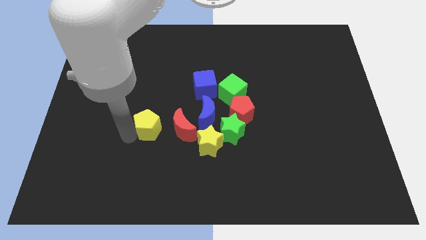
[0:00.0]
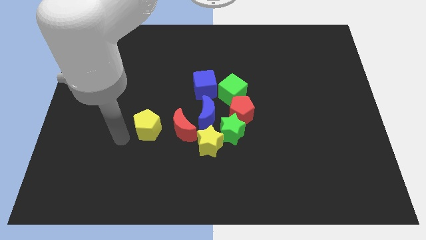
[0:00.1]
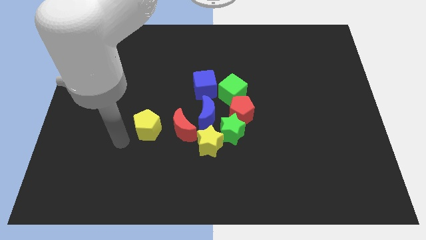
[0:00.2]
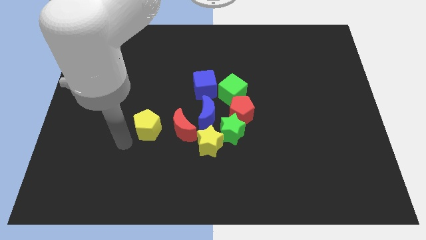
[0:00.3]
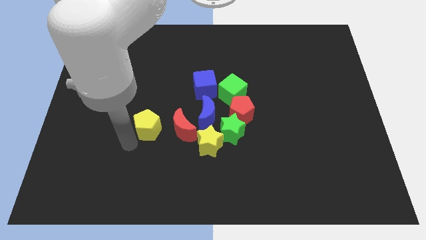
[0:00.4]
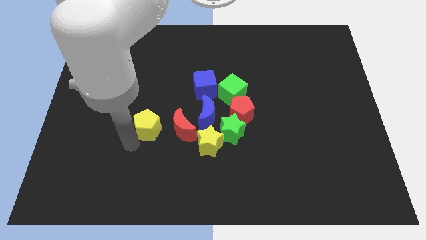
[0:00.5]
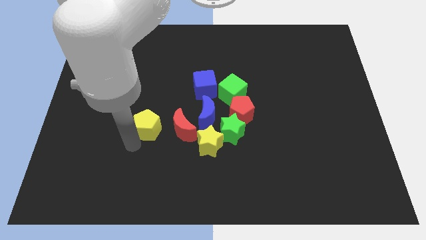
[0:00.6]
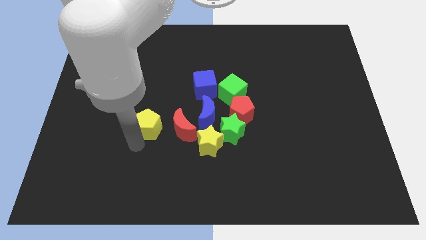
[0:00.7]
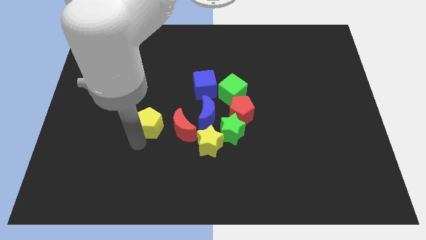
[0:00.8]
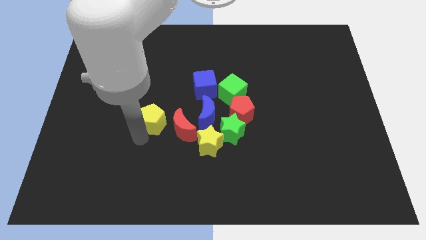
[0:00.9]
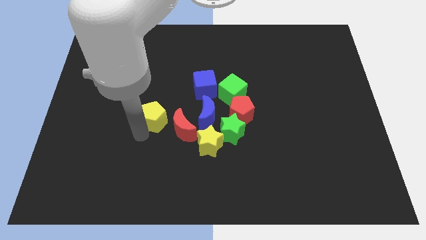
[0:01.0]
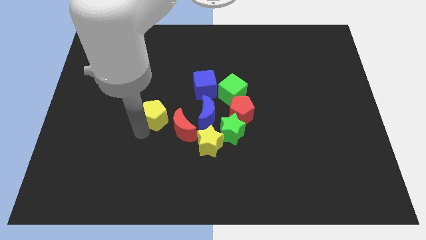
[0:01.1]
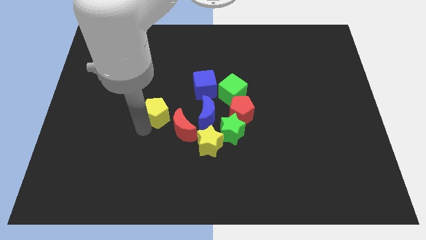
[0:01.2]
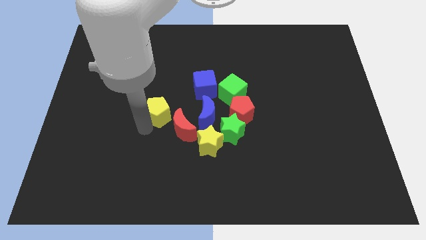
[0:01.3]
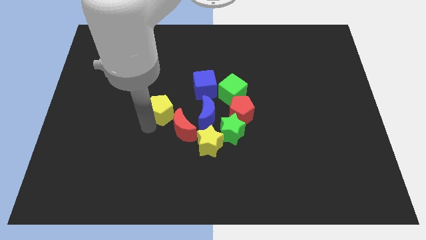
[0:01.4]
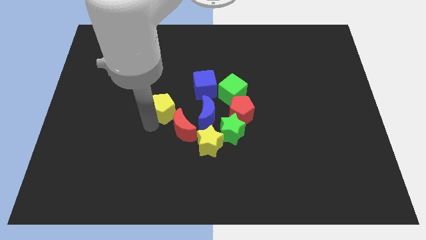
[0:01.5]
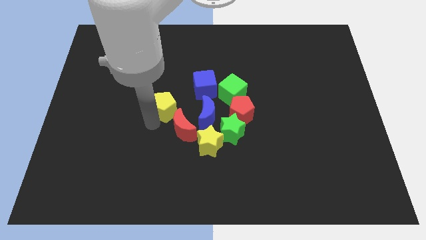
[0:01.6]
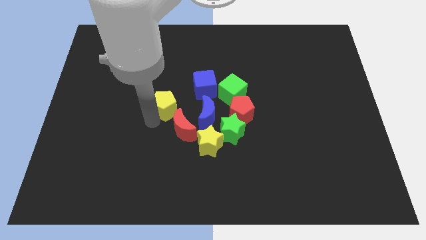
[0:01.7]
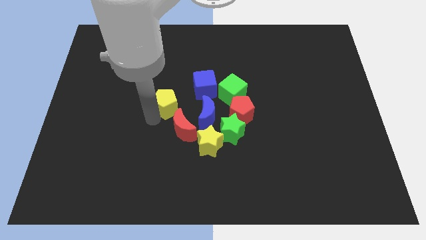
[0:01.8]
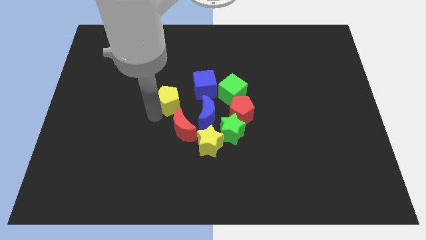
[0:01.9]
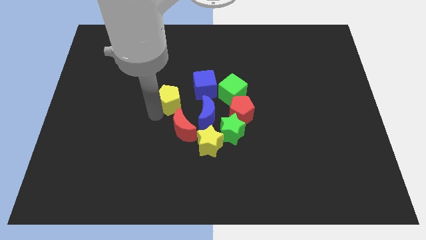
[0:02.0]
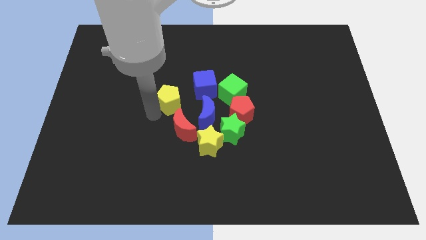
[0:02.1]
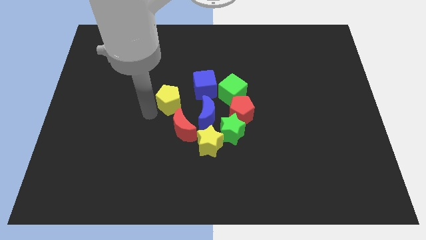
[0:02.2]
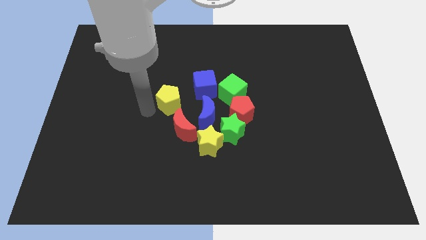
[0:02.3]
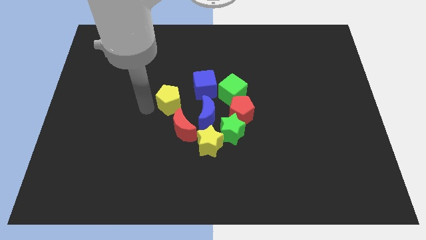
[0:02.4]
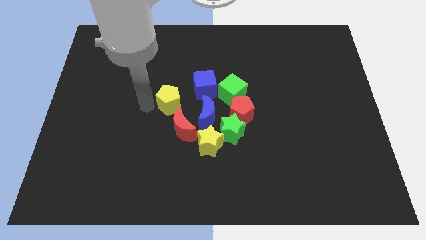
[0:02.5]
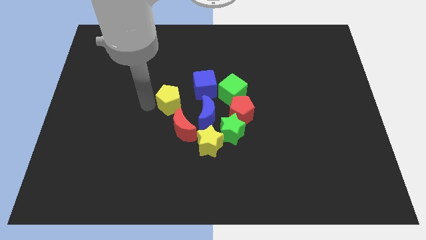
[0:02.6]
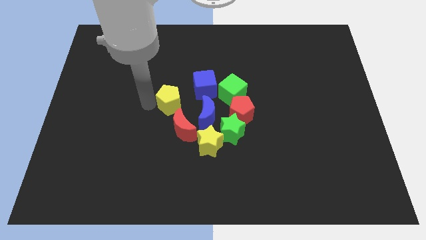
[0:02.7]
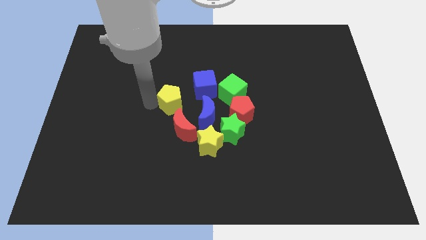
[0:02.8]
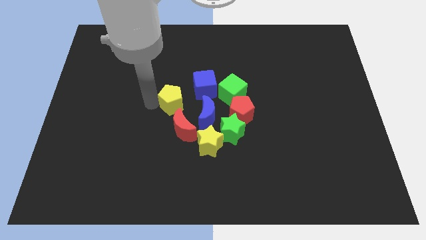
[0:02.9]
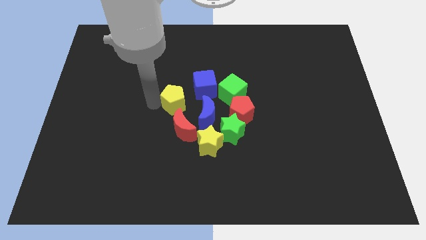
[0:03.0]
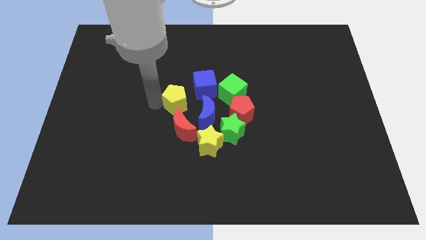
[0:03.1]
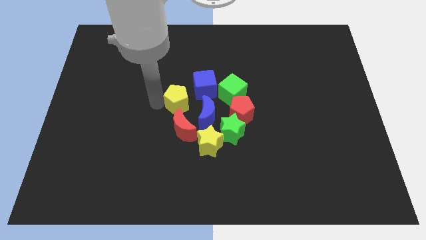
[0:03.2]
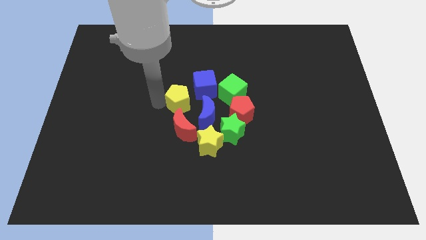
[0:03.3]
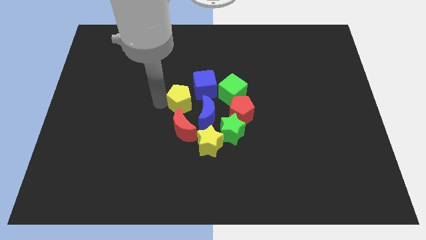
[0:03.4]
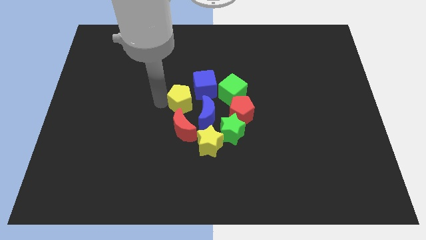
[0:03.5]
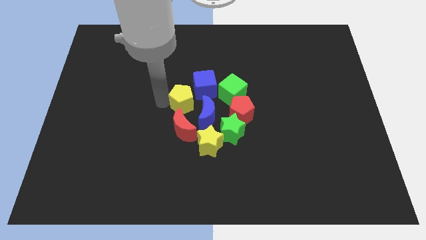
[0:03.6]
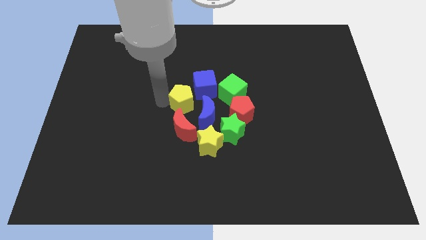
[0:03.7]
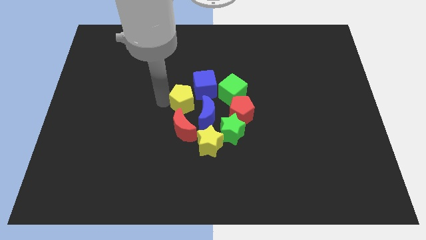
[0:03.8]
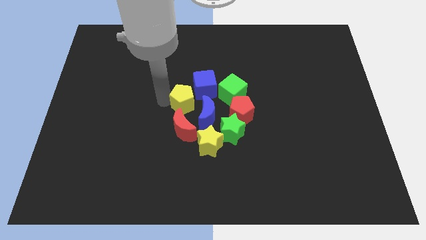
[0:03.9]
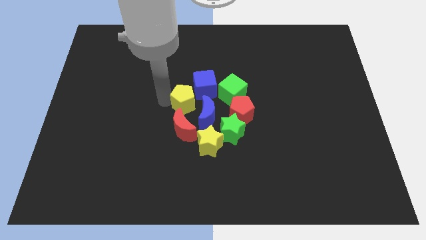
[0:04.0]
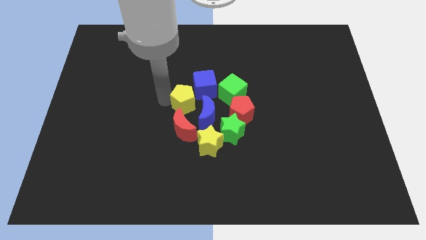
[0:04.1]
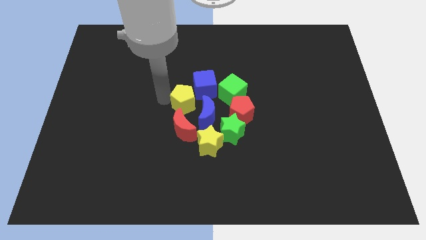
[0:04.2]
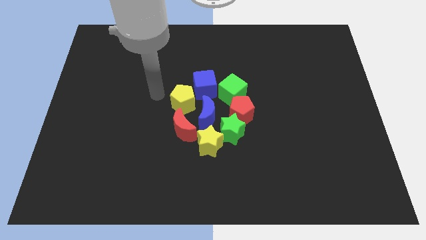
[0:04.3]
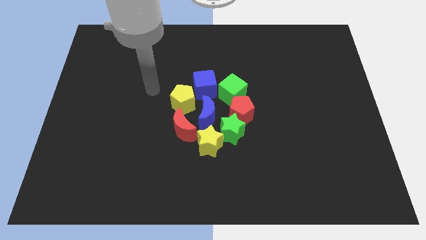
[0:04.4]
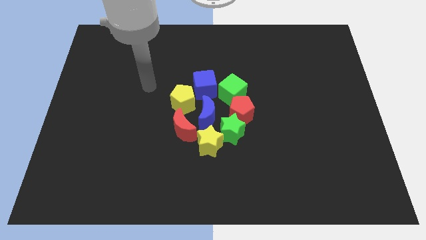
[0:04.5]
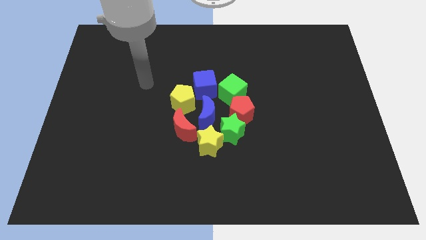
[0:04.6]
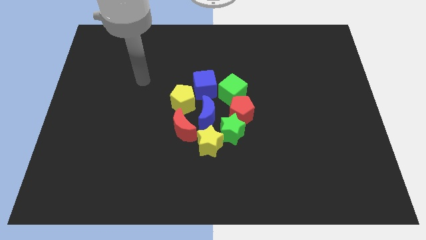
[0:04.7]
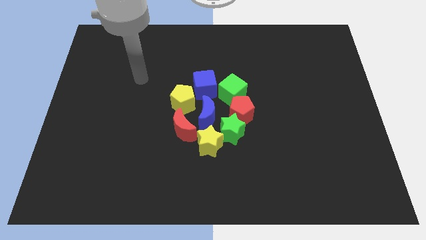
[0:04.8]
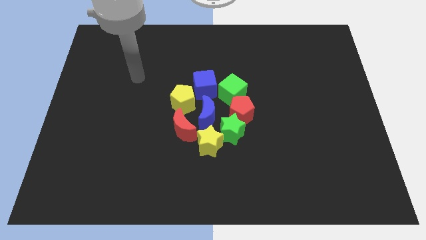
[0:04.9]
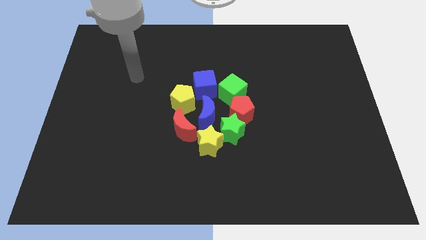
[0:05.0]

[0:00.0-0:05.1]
move the yellow pentagon towards blue cube

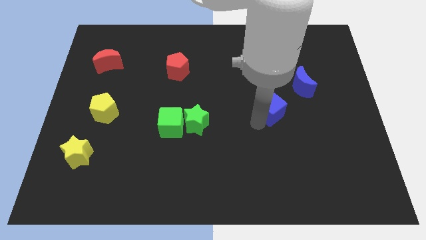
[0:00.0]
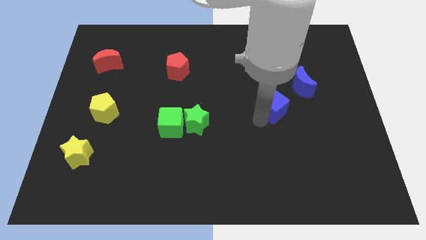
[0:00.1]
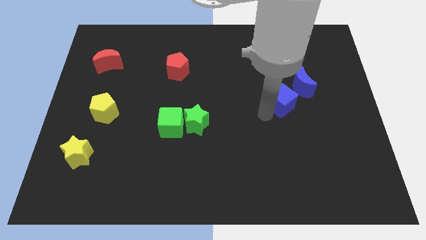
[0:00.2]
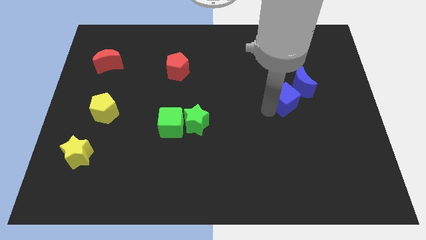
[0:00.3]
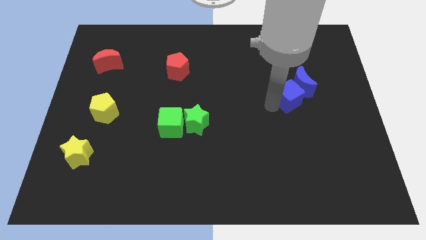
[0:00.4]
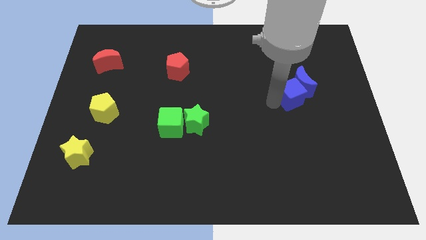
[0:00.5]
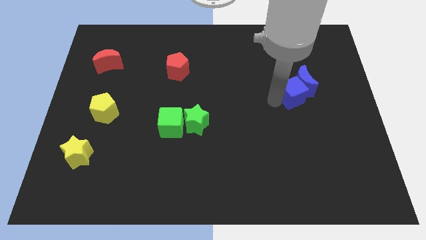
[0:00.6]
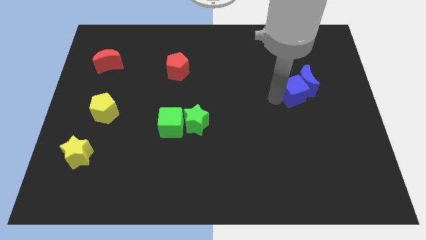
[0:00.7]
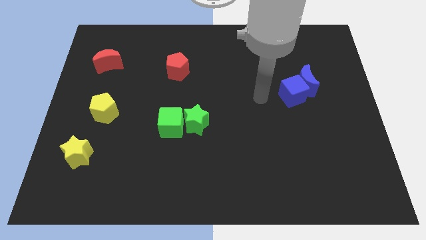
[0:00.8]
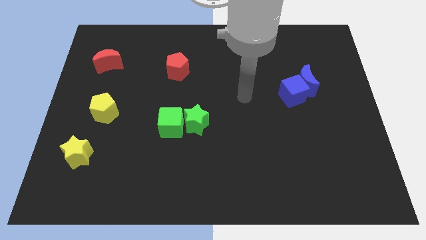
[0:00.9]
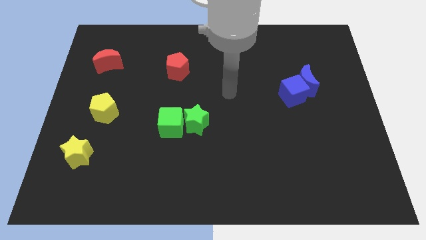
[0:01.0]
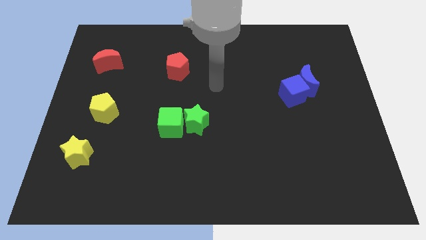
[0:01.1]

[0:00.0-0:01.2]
push blue cube in to blue moon

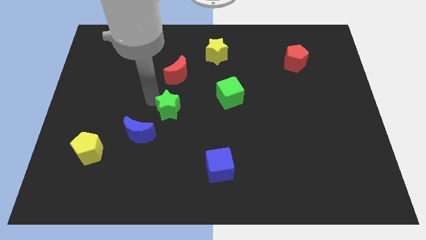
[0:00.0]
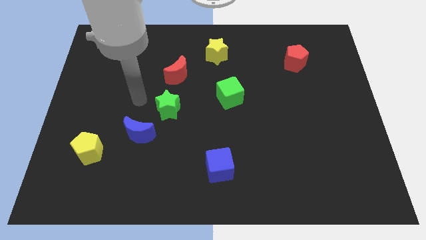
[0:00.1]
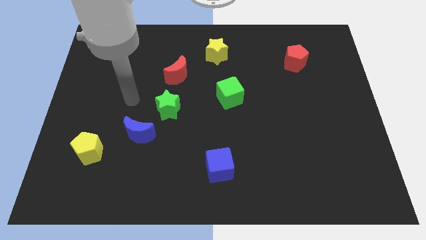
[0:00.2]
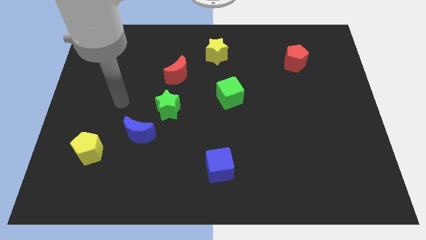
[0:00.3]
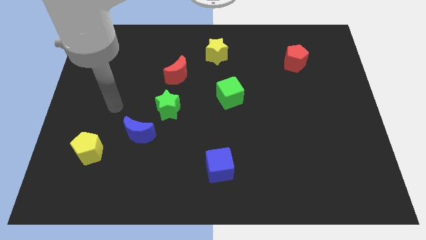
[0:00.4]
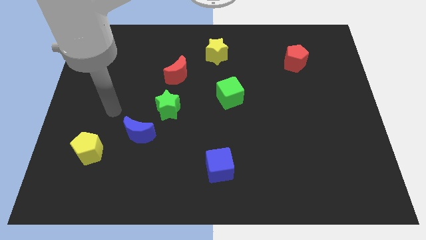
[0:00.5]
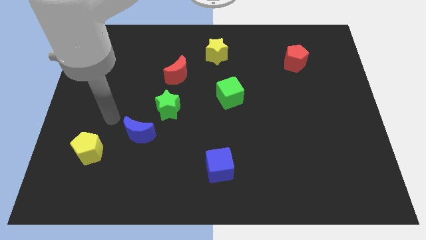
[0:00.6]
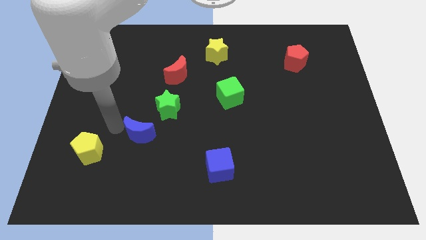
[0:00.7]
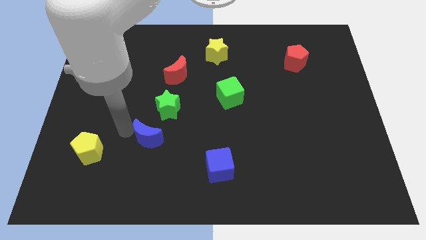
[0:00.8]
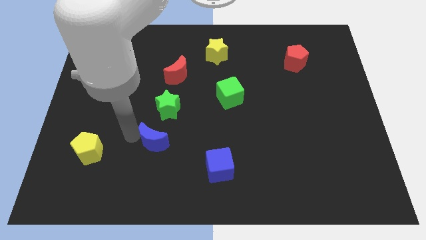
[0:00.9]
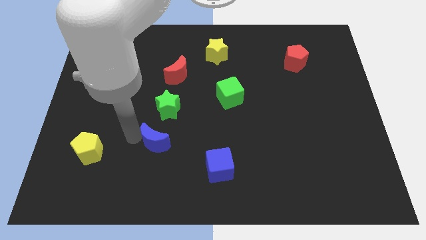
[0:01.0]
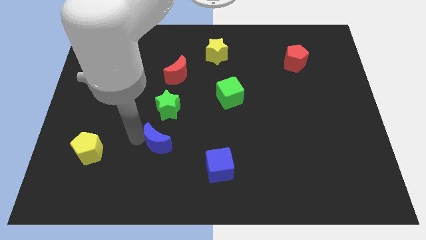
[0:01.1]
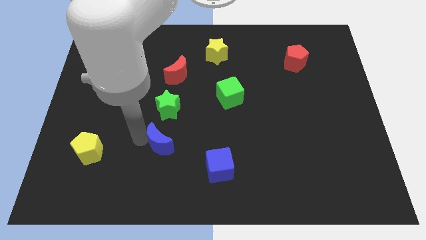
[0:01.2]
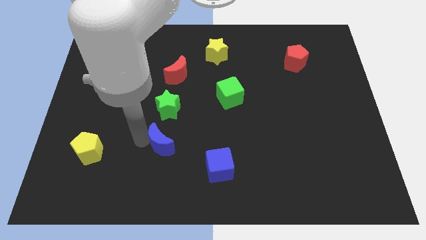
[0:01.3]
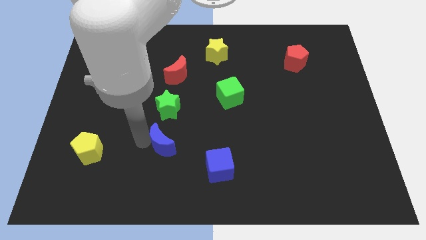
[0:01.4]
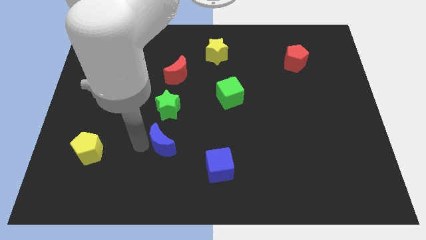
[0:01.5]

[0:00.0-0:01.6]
slightly push the blue crescent to the bottom of the green star

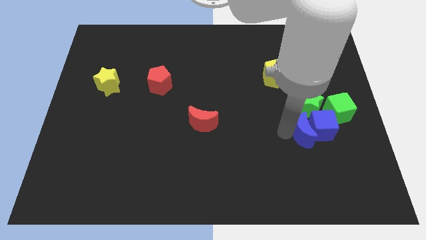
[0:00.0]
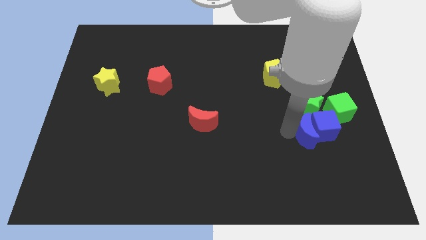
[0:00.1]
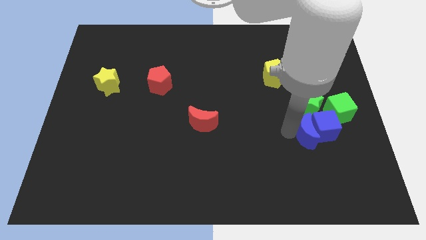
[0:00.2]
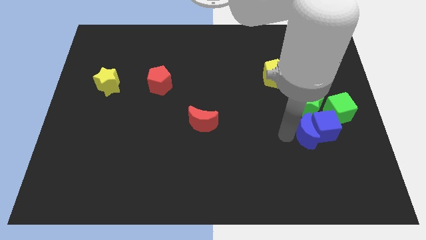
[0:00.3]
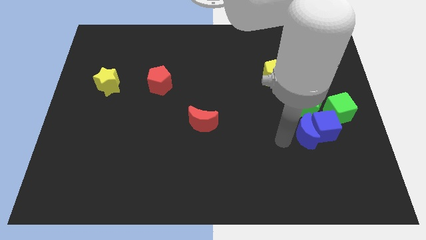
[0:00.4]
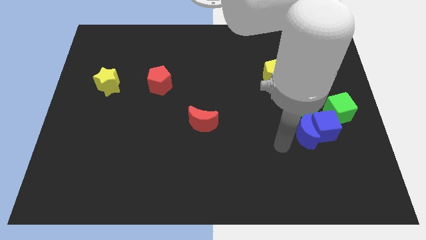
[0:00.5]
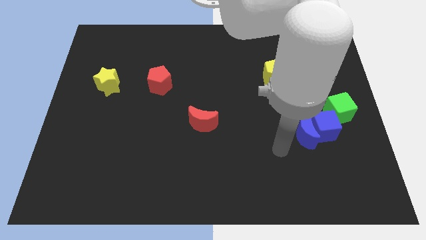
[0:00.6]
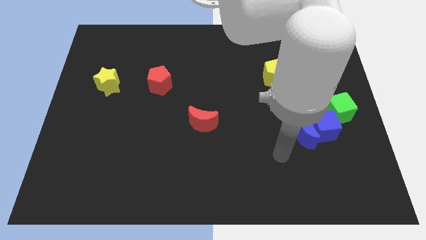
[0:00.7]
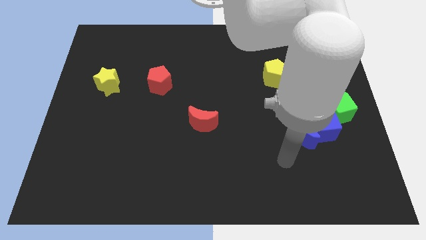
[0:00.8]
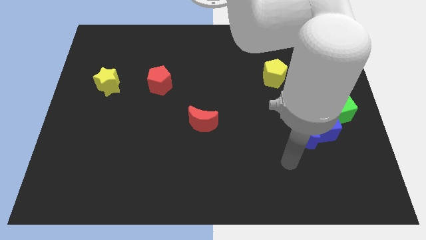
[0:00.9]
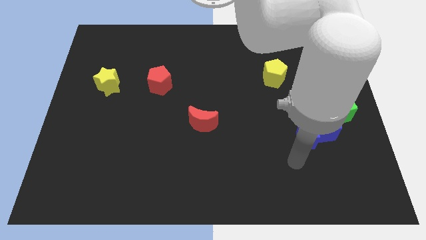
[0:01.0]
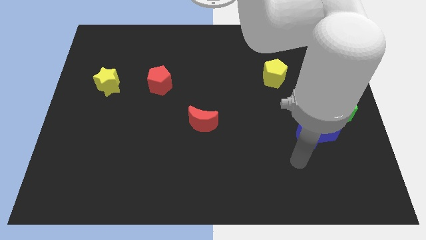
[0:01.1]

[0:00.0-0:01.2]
move your arm away from the blue moon
